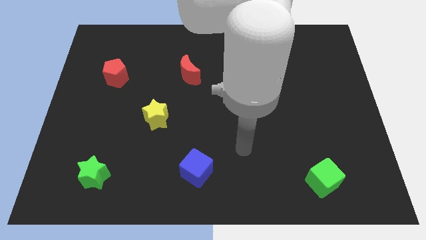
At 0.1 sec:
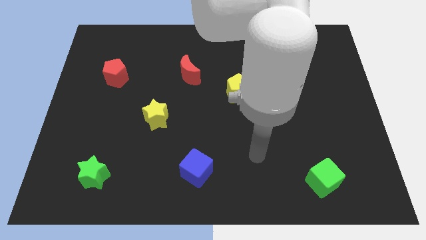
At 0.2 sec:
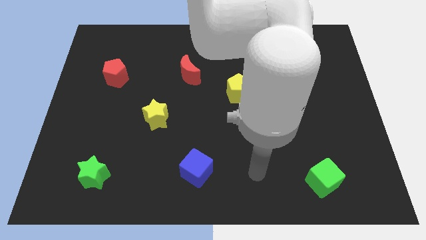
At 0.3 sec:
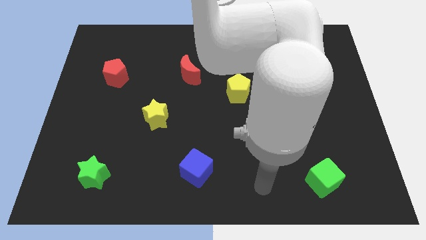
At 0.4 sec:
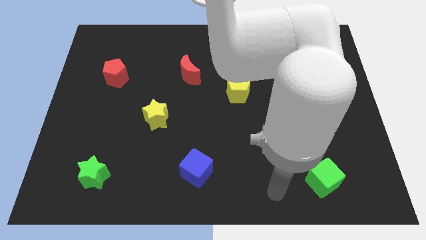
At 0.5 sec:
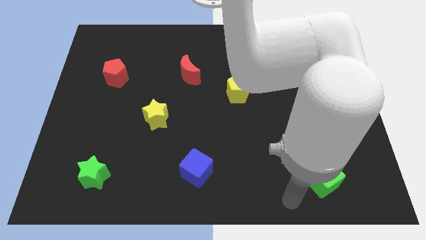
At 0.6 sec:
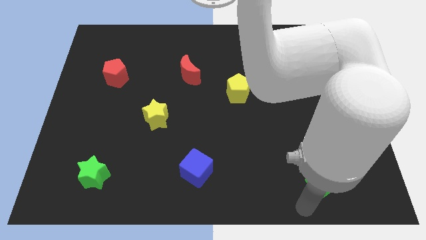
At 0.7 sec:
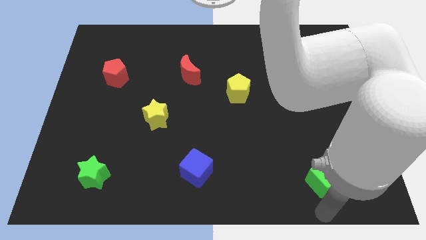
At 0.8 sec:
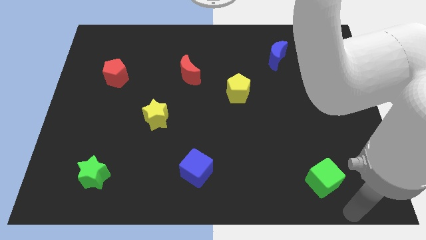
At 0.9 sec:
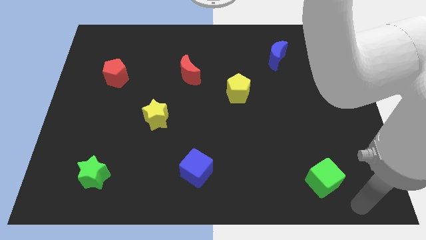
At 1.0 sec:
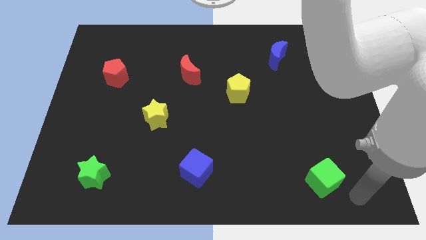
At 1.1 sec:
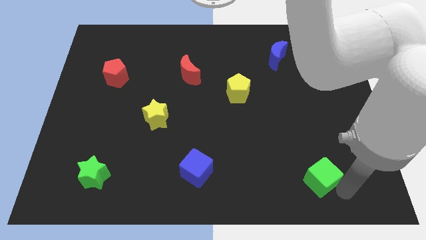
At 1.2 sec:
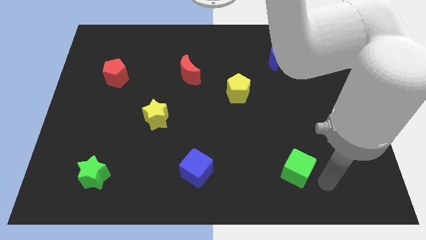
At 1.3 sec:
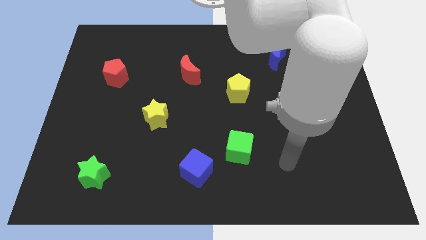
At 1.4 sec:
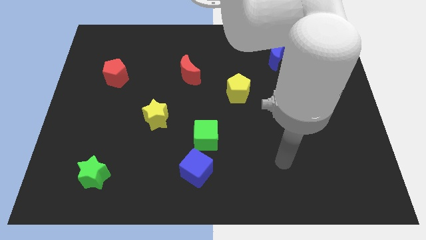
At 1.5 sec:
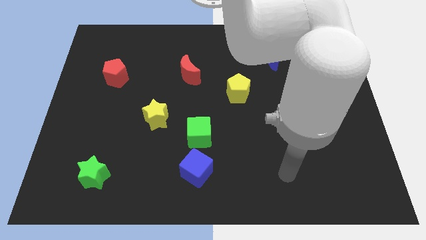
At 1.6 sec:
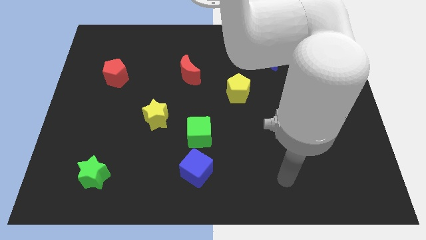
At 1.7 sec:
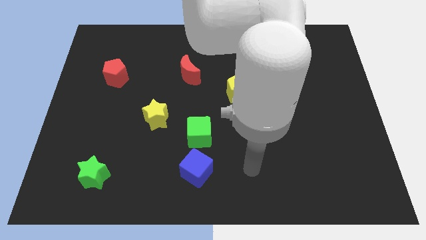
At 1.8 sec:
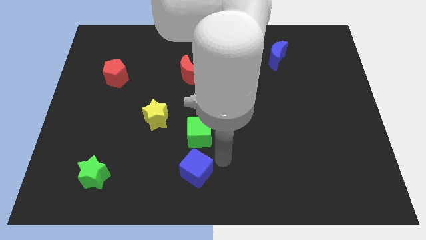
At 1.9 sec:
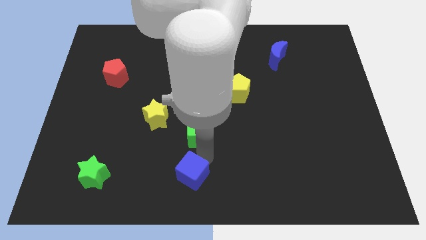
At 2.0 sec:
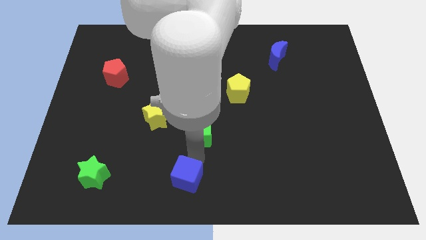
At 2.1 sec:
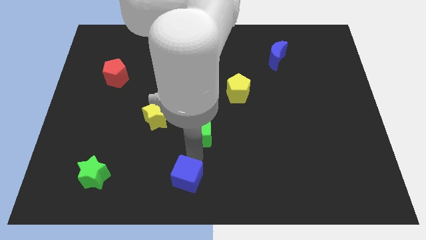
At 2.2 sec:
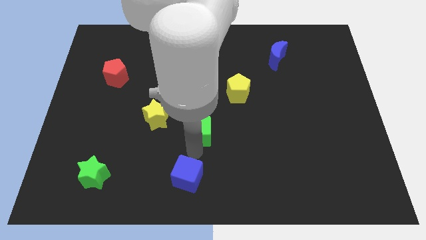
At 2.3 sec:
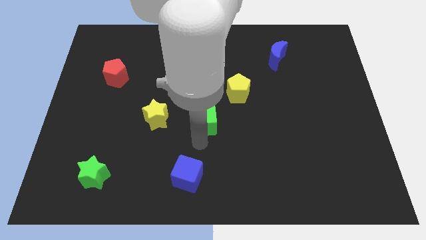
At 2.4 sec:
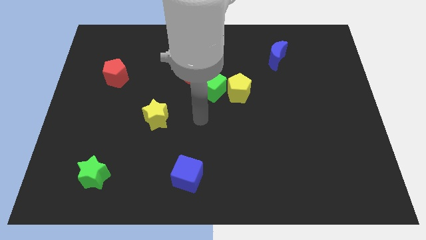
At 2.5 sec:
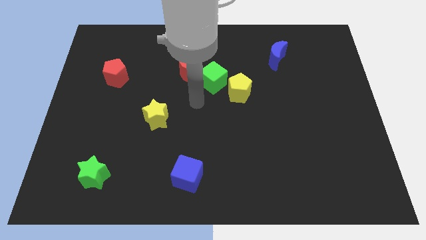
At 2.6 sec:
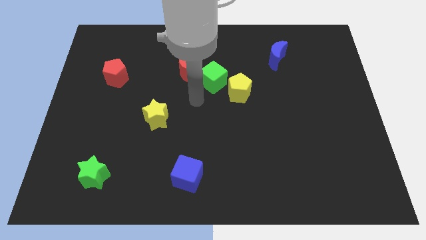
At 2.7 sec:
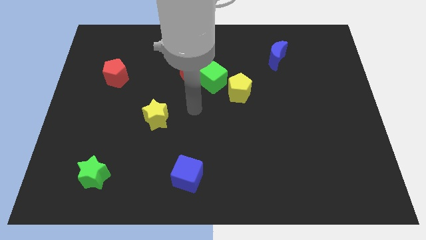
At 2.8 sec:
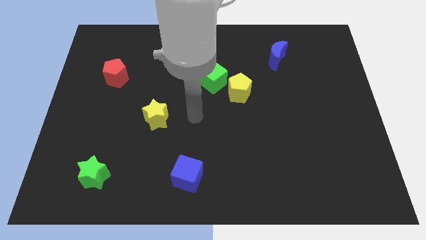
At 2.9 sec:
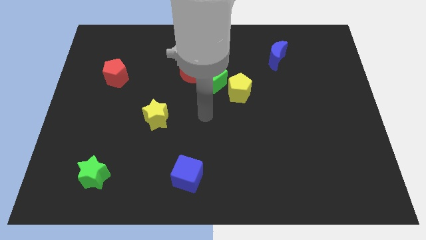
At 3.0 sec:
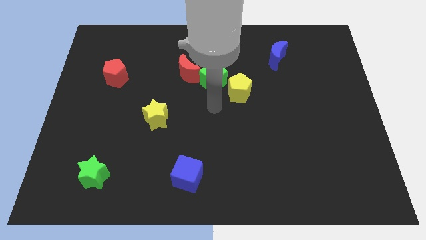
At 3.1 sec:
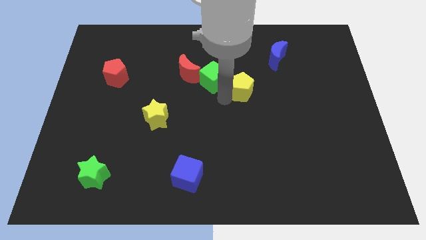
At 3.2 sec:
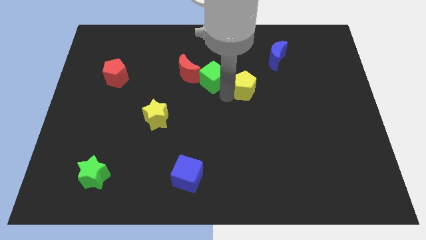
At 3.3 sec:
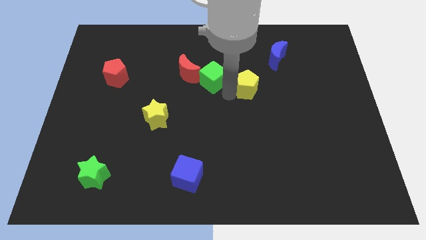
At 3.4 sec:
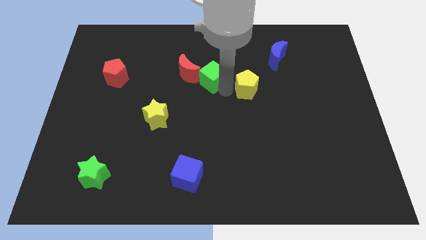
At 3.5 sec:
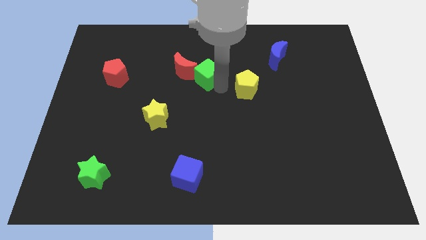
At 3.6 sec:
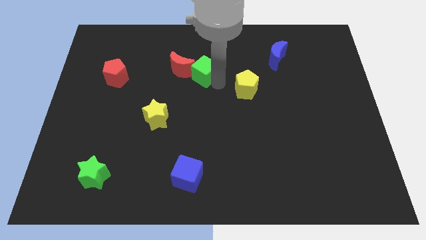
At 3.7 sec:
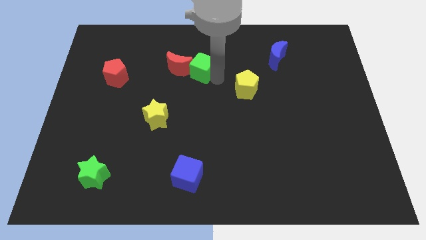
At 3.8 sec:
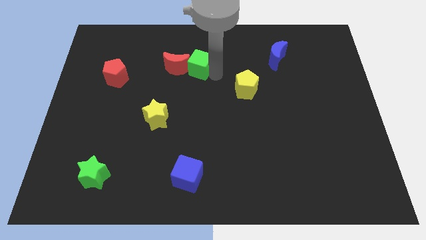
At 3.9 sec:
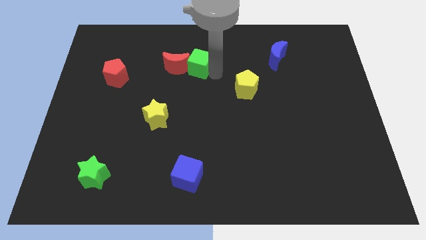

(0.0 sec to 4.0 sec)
push the green cube close to the red moon

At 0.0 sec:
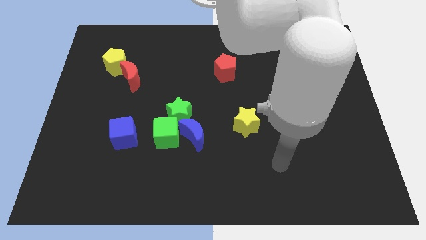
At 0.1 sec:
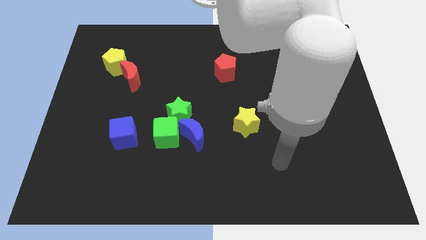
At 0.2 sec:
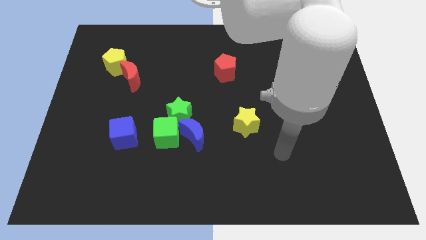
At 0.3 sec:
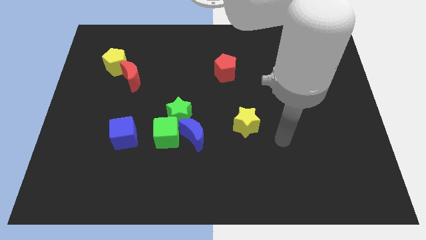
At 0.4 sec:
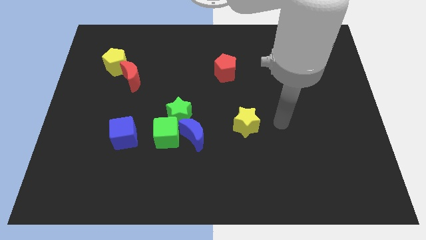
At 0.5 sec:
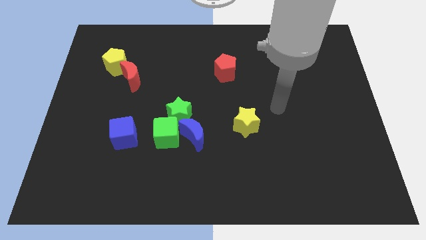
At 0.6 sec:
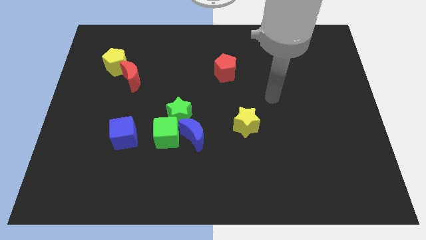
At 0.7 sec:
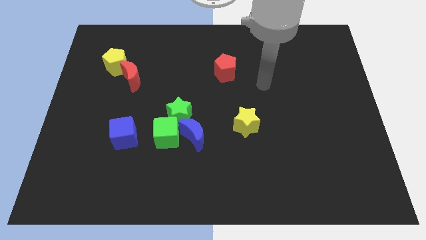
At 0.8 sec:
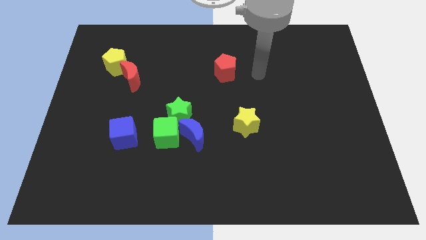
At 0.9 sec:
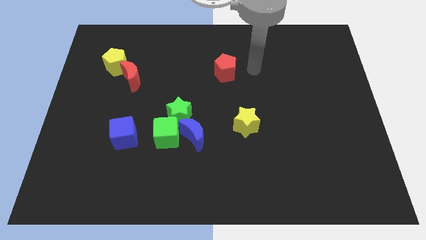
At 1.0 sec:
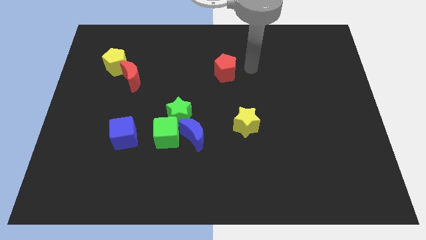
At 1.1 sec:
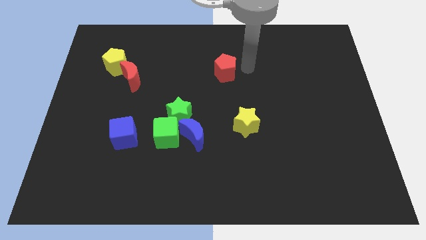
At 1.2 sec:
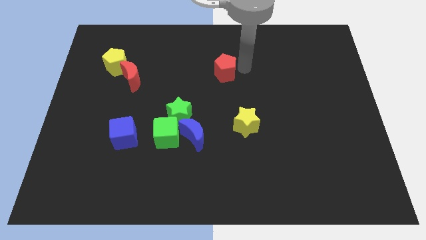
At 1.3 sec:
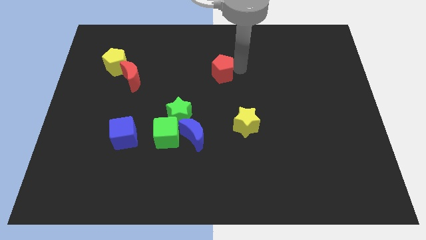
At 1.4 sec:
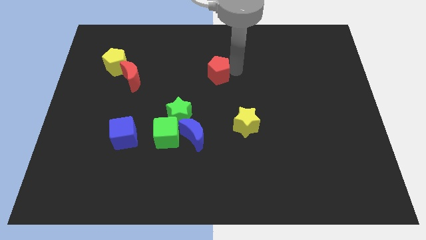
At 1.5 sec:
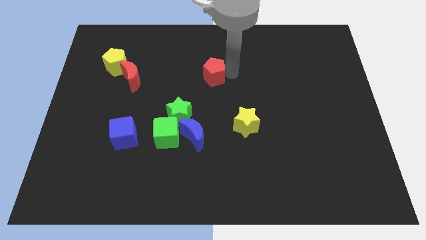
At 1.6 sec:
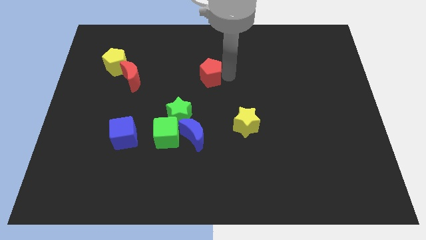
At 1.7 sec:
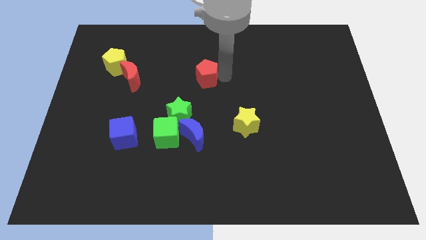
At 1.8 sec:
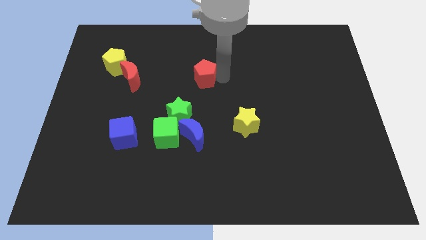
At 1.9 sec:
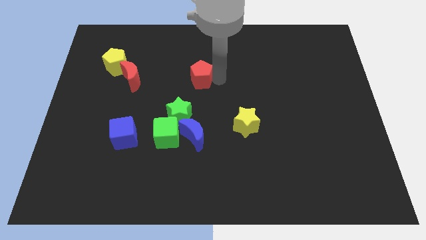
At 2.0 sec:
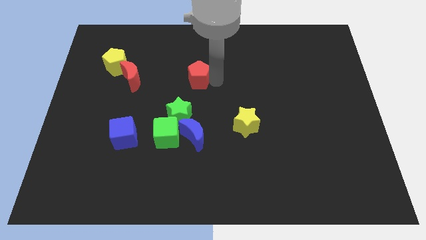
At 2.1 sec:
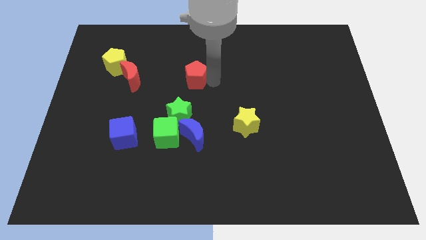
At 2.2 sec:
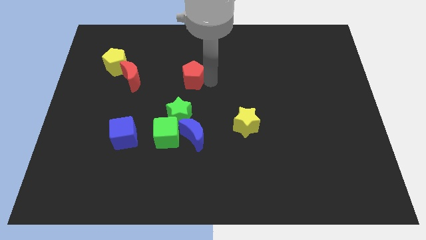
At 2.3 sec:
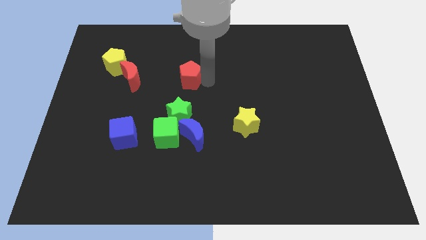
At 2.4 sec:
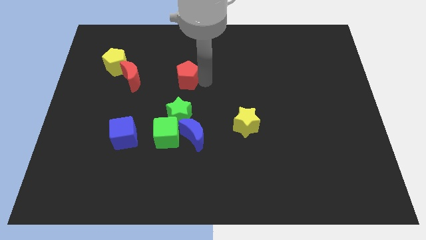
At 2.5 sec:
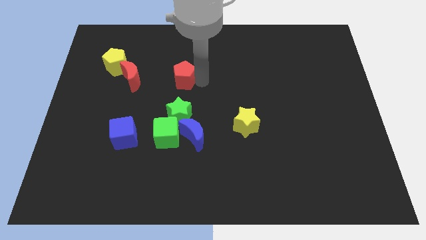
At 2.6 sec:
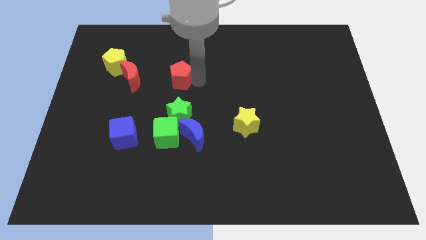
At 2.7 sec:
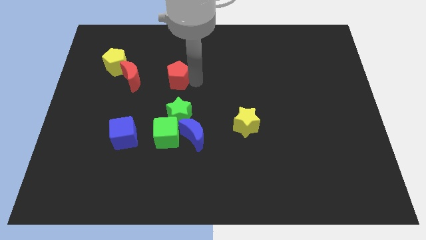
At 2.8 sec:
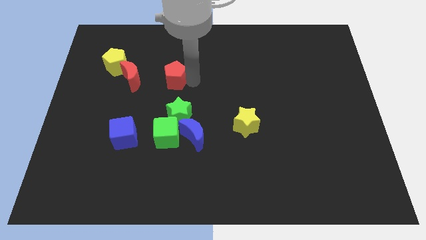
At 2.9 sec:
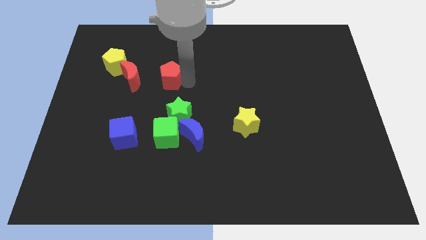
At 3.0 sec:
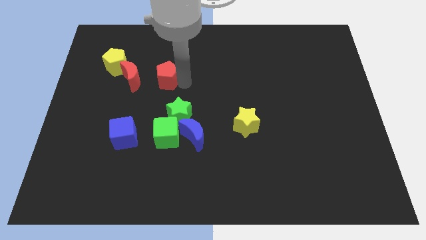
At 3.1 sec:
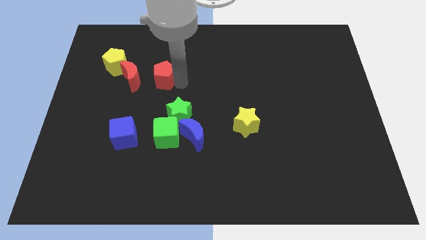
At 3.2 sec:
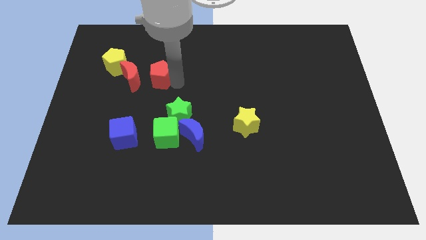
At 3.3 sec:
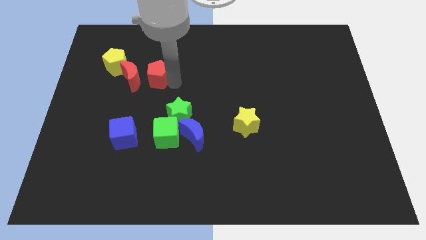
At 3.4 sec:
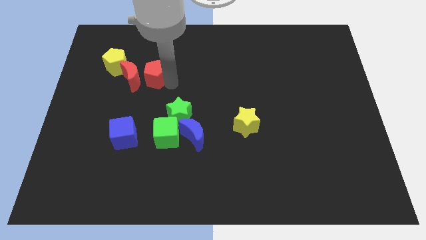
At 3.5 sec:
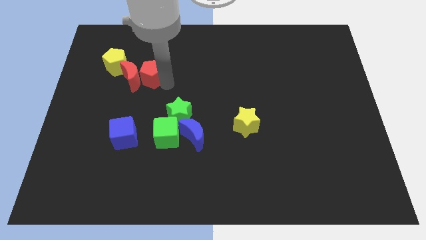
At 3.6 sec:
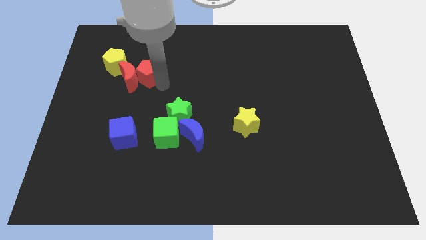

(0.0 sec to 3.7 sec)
slide the red pentagon next to the red moon

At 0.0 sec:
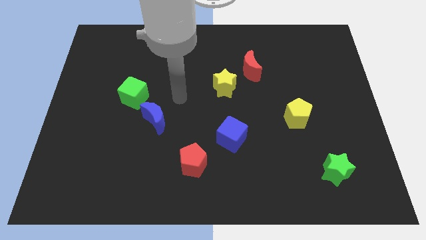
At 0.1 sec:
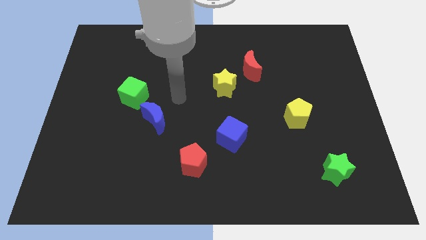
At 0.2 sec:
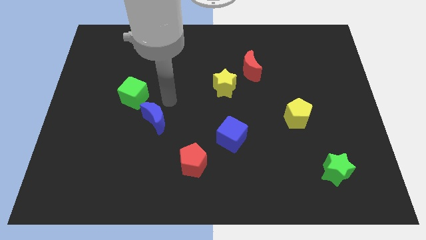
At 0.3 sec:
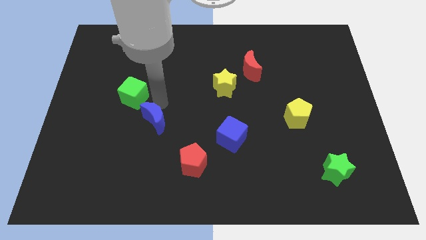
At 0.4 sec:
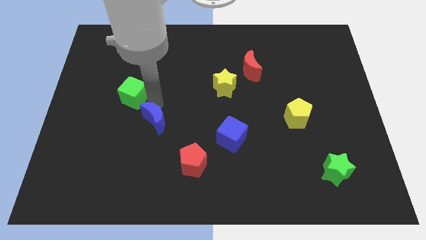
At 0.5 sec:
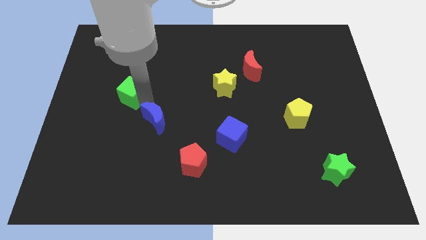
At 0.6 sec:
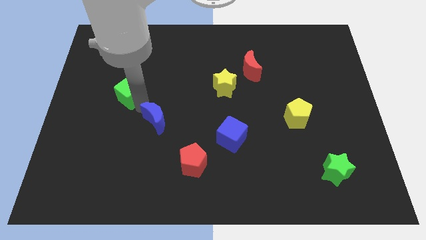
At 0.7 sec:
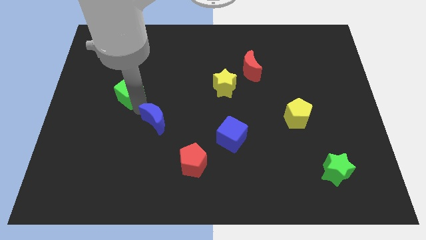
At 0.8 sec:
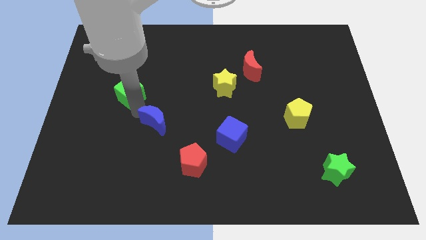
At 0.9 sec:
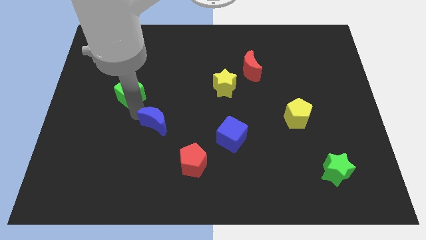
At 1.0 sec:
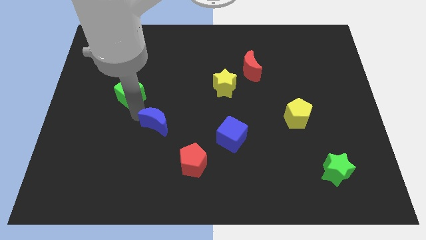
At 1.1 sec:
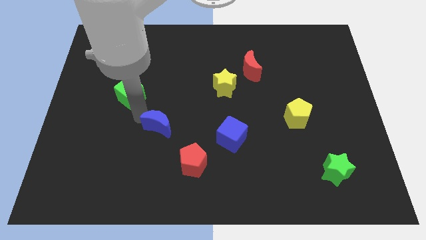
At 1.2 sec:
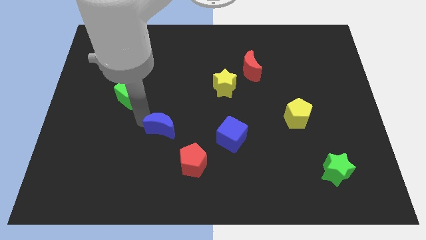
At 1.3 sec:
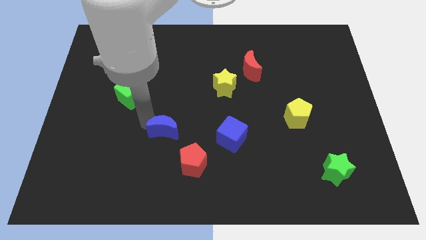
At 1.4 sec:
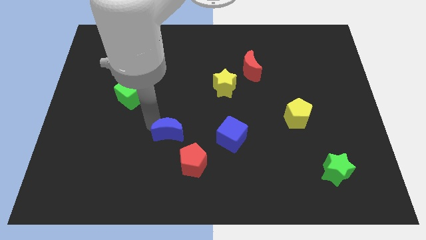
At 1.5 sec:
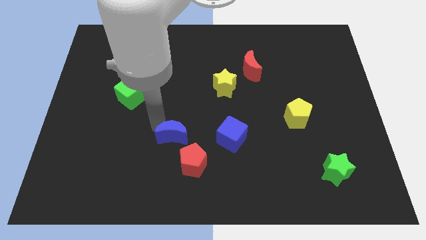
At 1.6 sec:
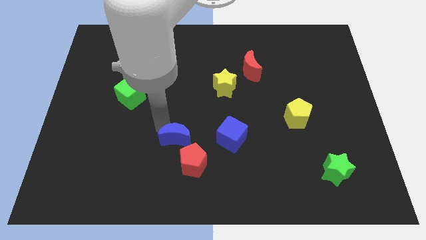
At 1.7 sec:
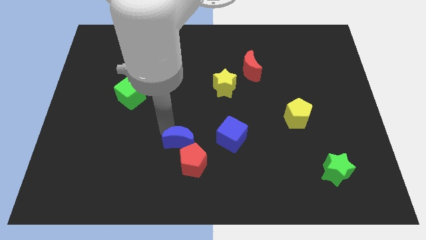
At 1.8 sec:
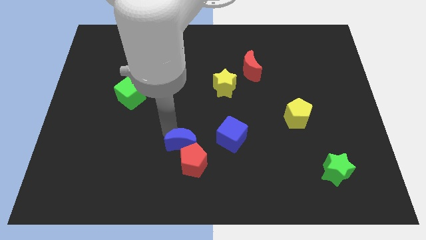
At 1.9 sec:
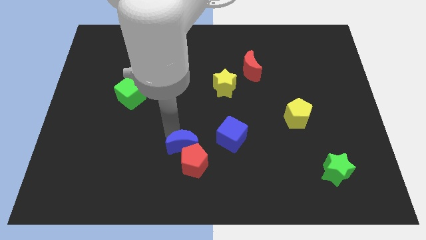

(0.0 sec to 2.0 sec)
put the blue moon to the red pentagon
